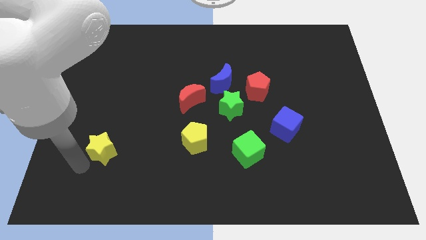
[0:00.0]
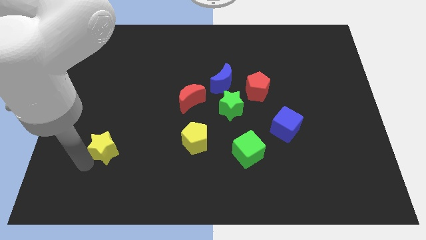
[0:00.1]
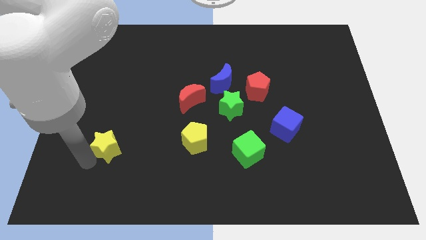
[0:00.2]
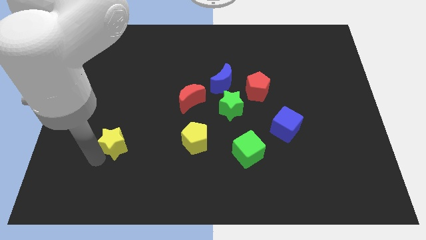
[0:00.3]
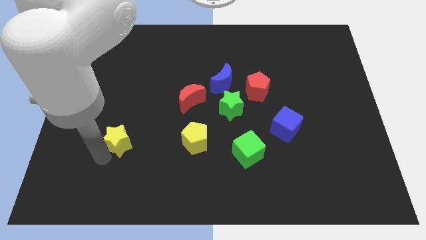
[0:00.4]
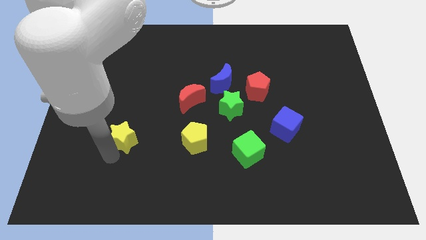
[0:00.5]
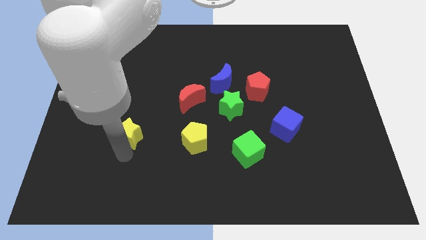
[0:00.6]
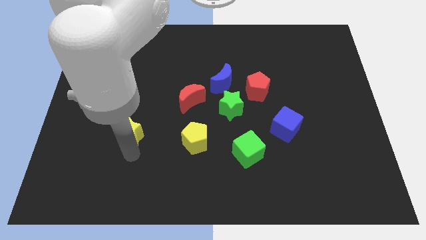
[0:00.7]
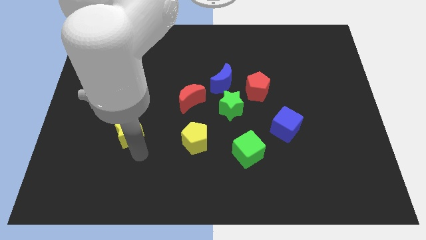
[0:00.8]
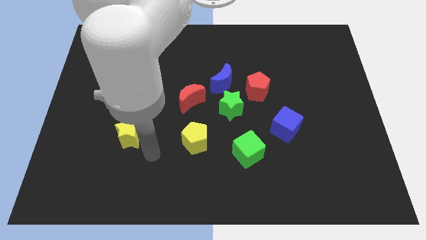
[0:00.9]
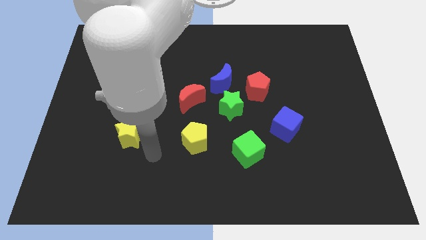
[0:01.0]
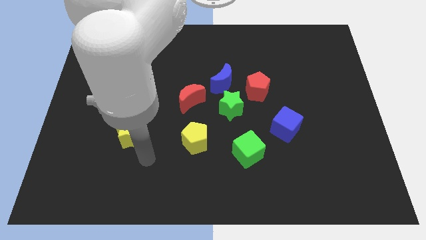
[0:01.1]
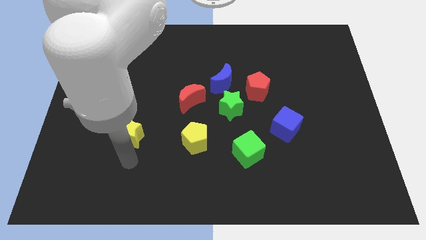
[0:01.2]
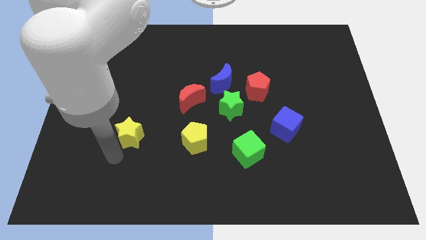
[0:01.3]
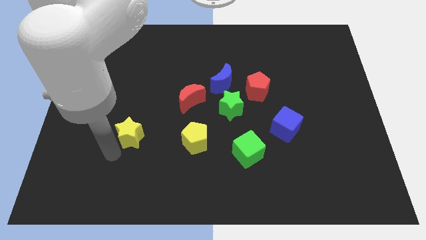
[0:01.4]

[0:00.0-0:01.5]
push the yellow star to the left yellow pentagon

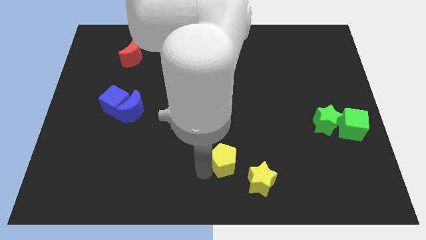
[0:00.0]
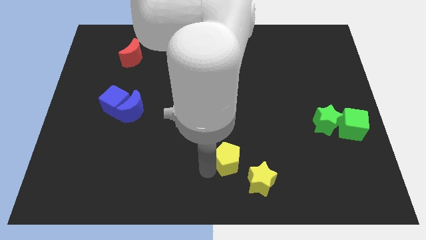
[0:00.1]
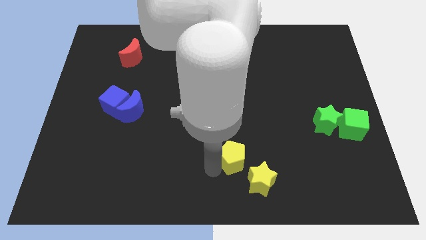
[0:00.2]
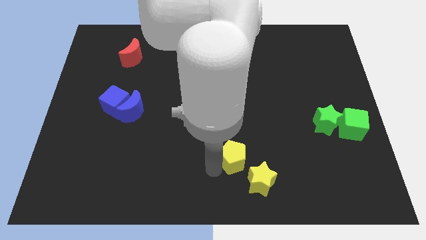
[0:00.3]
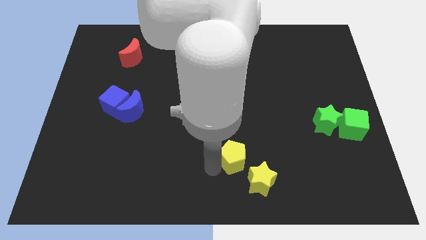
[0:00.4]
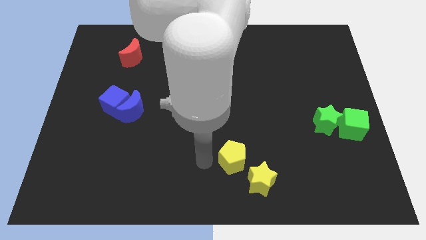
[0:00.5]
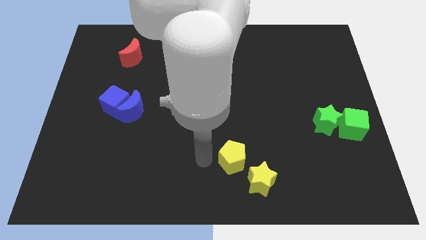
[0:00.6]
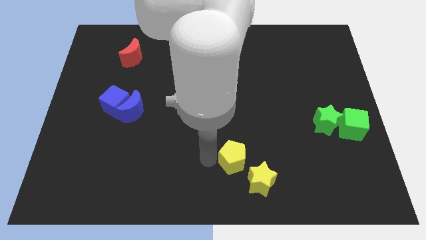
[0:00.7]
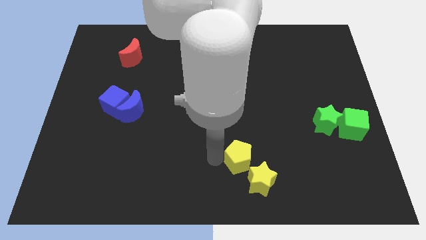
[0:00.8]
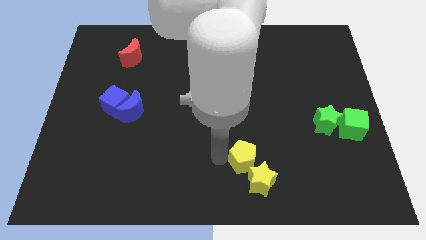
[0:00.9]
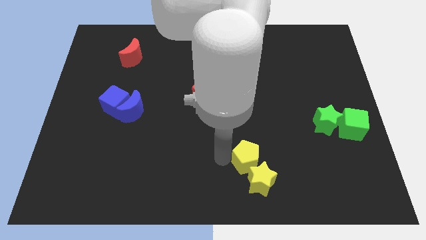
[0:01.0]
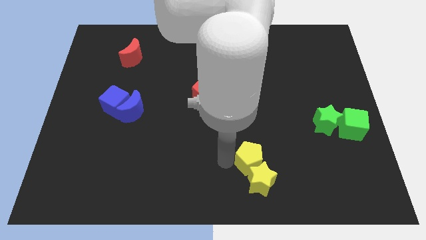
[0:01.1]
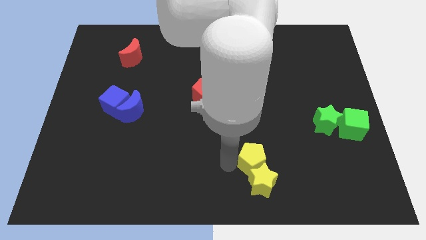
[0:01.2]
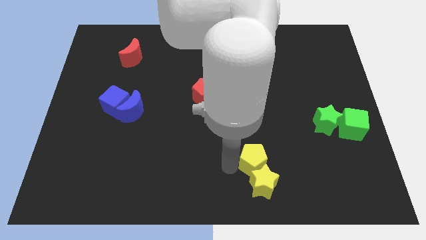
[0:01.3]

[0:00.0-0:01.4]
push the yellow pentagon into the yellow star

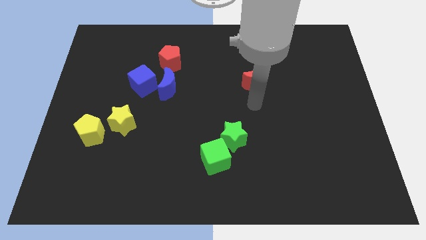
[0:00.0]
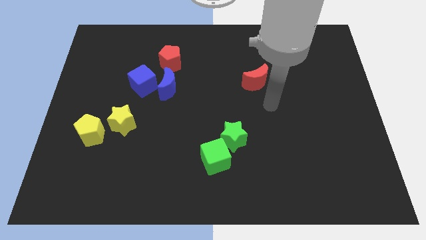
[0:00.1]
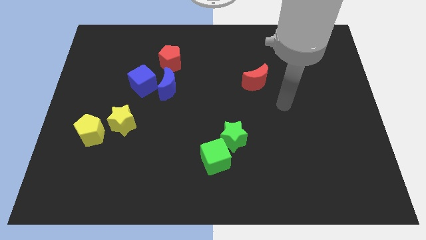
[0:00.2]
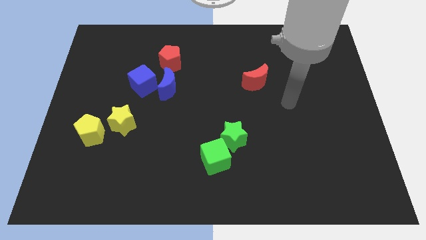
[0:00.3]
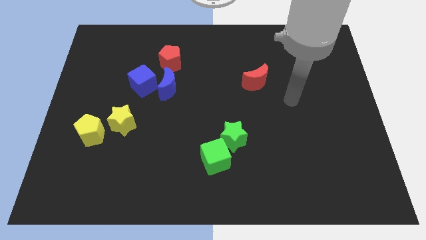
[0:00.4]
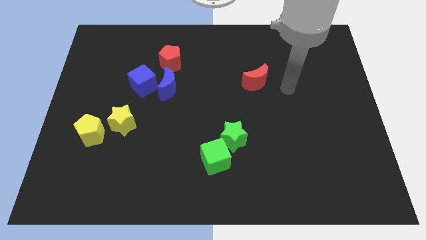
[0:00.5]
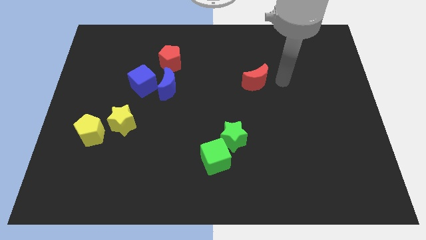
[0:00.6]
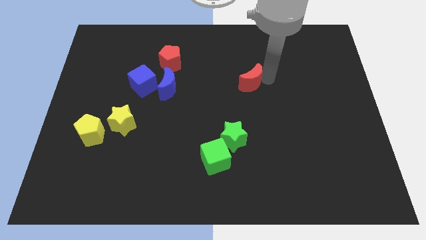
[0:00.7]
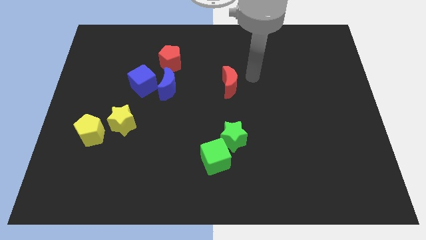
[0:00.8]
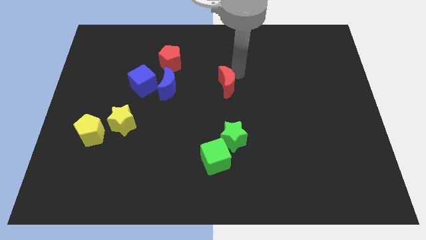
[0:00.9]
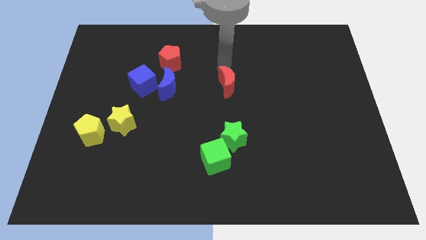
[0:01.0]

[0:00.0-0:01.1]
slightly push the red moon towards the left

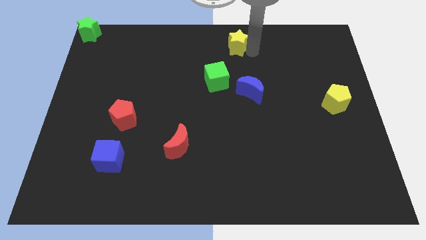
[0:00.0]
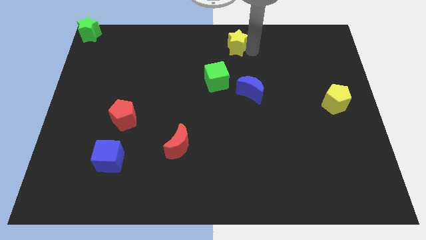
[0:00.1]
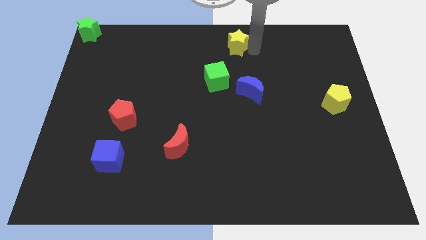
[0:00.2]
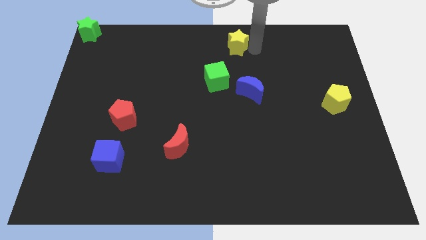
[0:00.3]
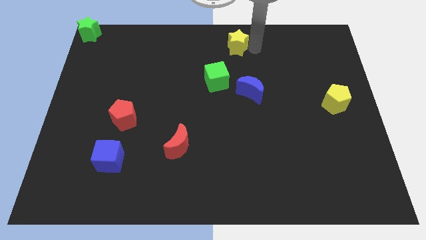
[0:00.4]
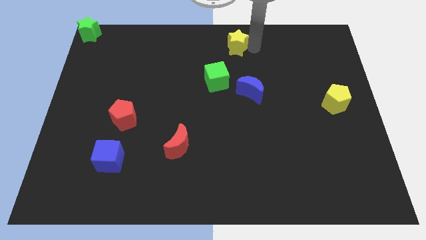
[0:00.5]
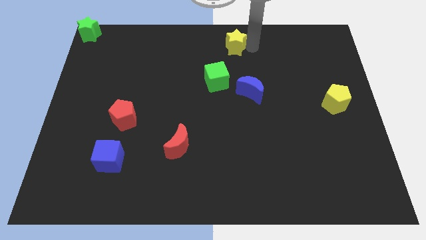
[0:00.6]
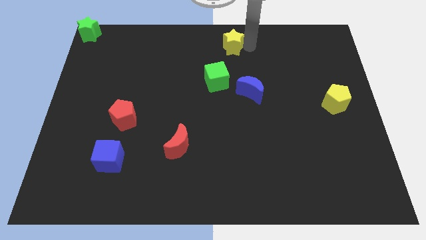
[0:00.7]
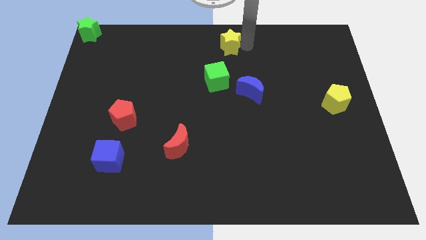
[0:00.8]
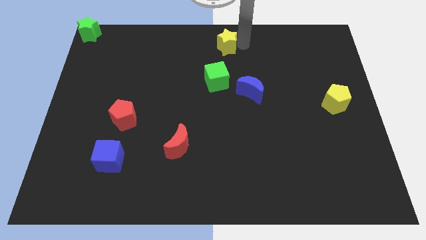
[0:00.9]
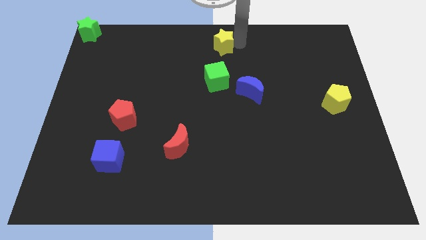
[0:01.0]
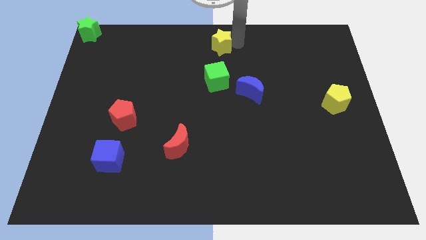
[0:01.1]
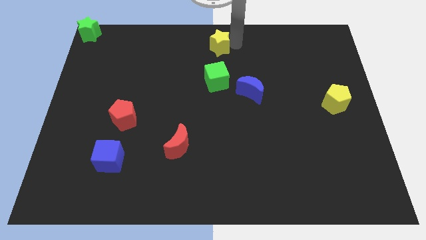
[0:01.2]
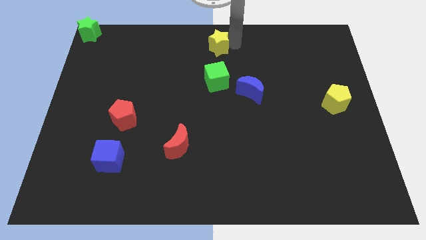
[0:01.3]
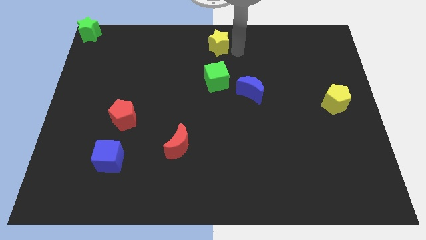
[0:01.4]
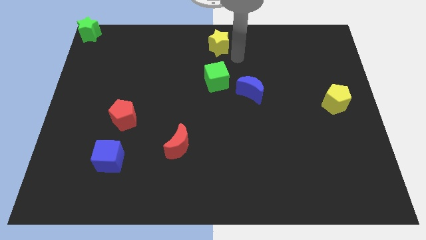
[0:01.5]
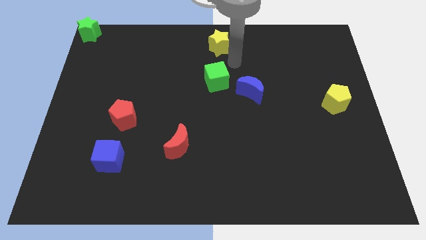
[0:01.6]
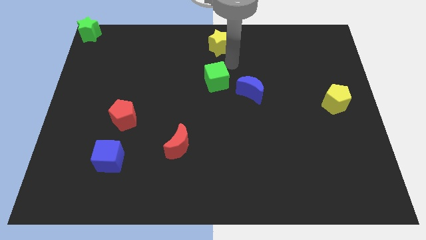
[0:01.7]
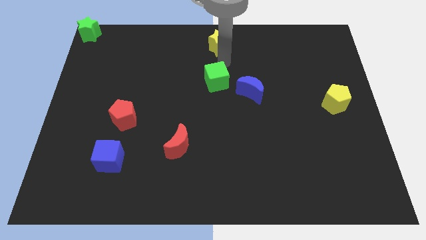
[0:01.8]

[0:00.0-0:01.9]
place a yellow star towards the top center of the board

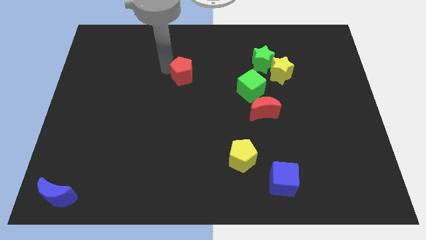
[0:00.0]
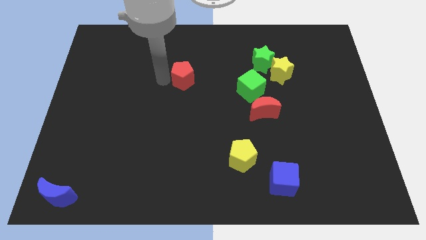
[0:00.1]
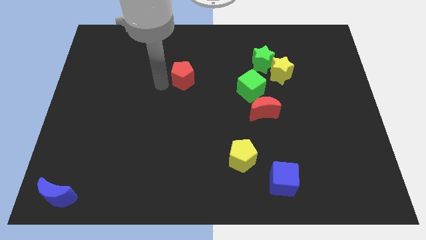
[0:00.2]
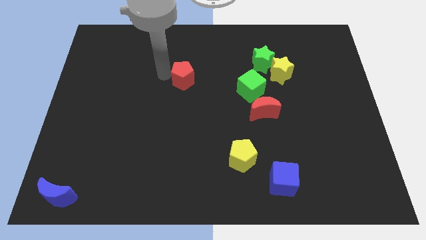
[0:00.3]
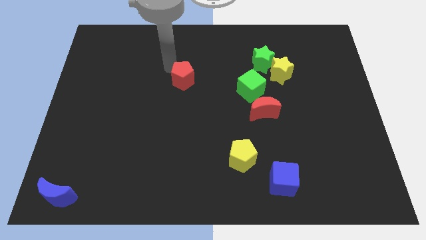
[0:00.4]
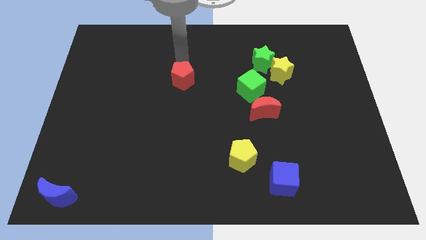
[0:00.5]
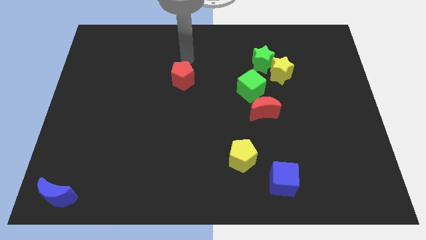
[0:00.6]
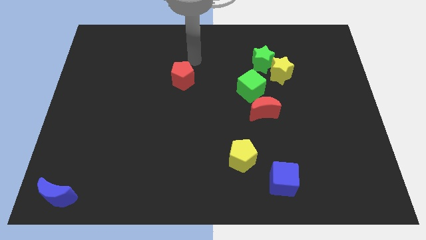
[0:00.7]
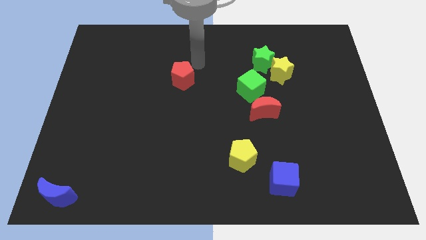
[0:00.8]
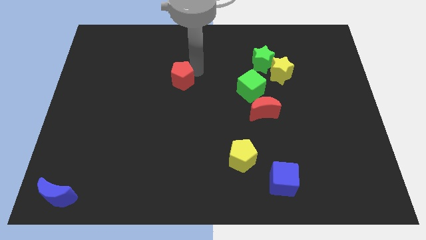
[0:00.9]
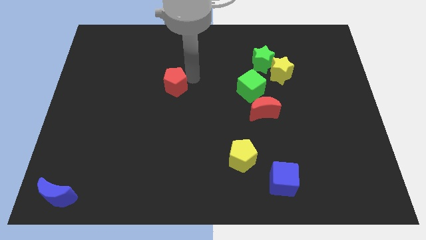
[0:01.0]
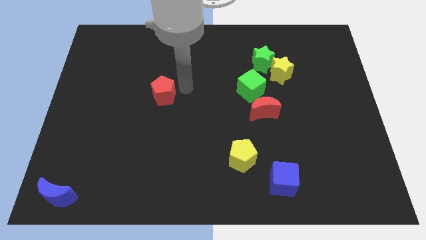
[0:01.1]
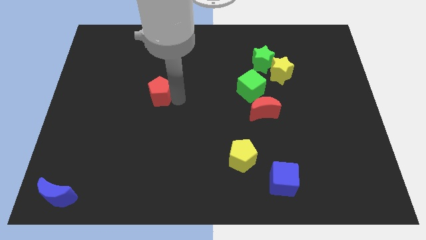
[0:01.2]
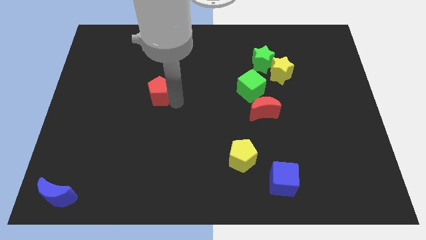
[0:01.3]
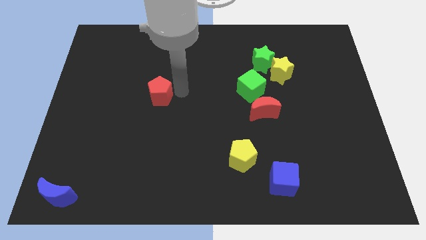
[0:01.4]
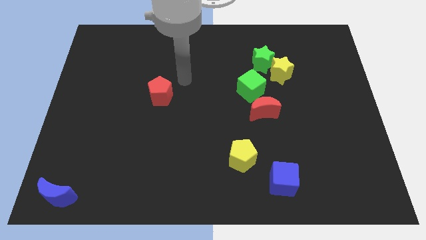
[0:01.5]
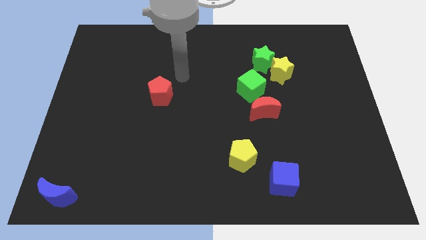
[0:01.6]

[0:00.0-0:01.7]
push the red pentagon towards the center of the board

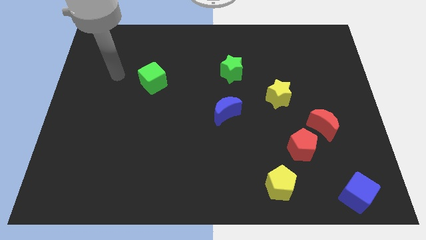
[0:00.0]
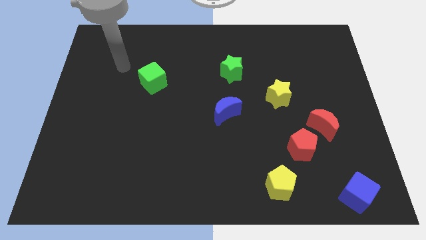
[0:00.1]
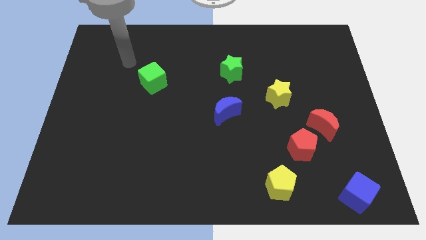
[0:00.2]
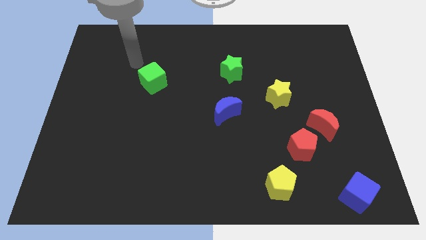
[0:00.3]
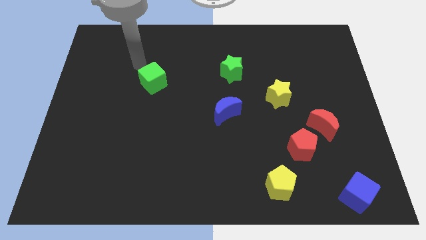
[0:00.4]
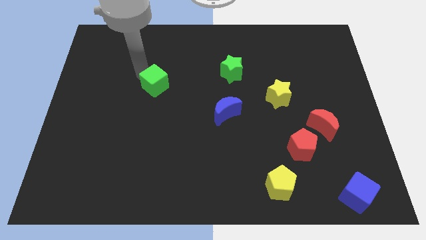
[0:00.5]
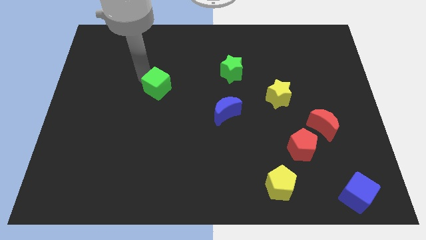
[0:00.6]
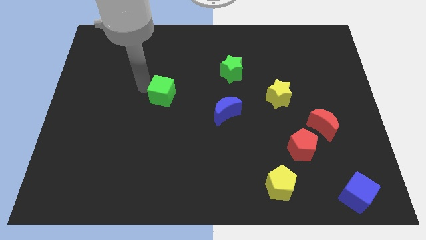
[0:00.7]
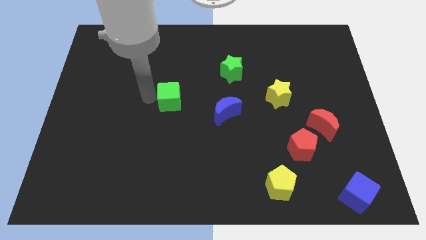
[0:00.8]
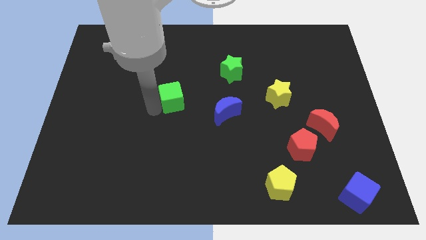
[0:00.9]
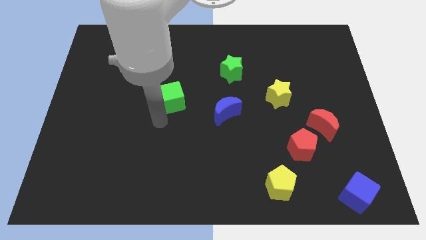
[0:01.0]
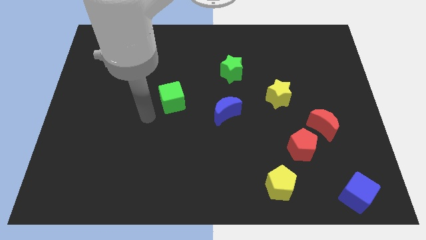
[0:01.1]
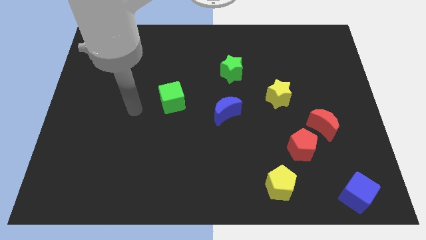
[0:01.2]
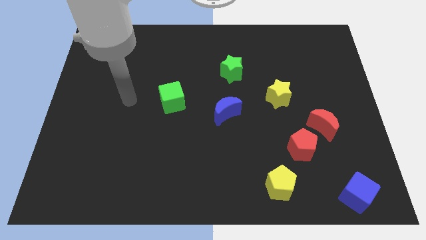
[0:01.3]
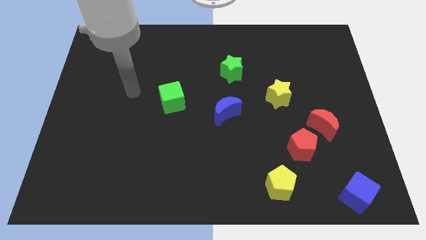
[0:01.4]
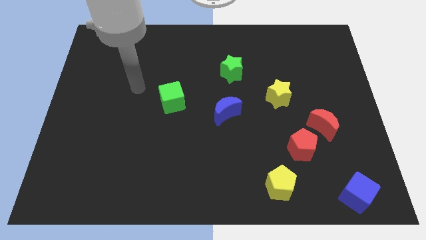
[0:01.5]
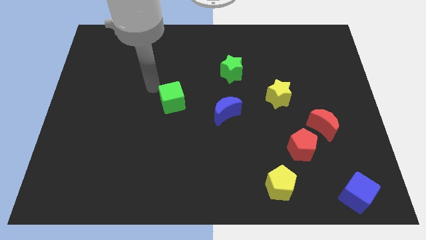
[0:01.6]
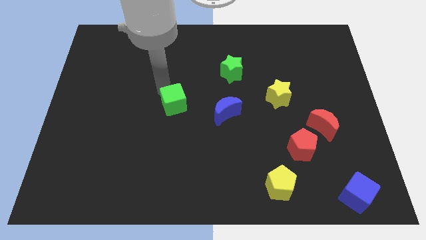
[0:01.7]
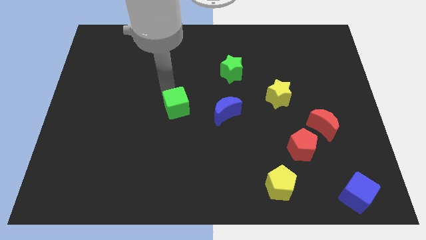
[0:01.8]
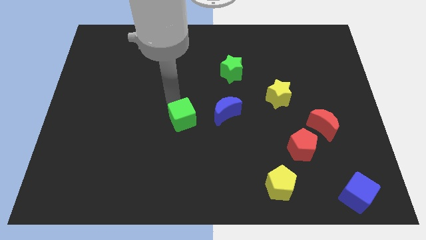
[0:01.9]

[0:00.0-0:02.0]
move the green cube to the left side of the blue moon
